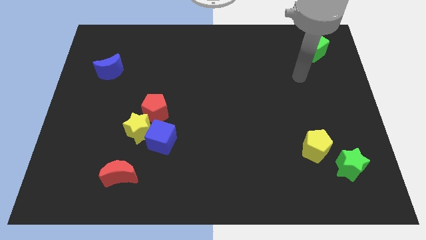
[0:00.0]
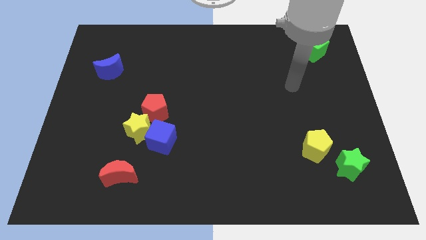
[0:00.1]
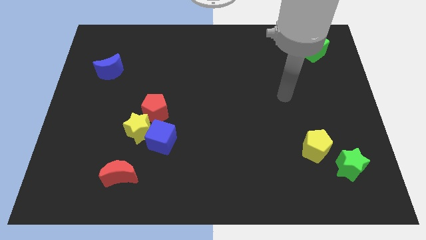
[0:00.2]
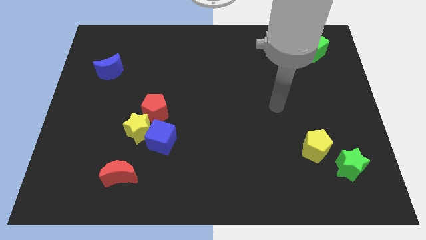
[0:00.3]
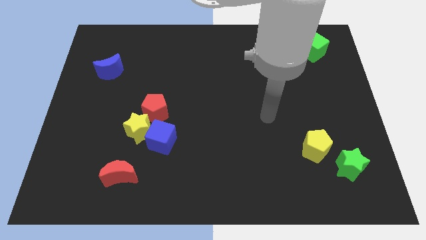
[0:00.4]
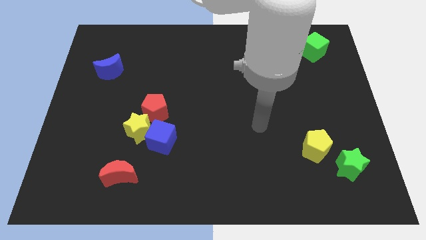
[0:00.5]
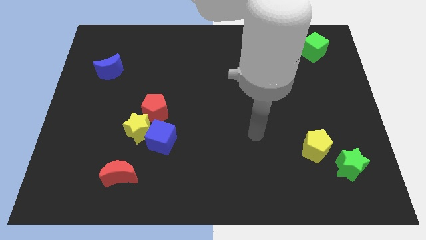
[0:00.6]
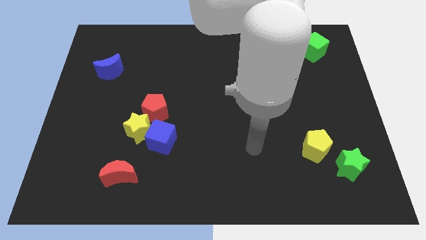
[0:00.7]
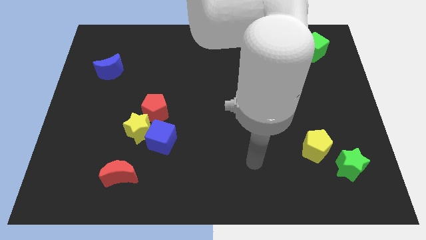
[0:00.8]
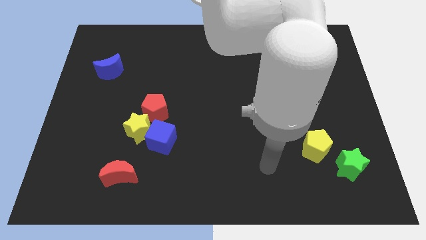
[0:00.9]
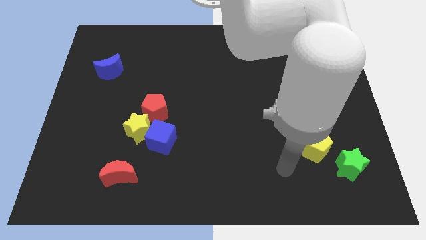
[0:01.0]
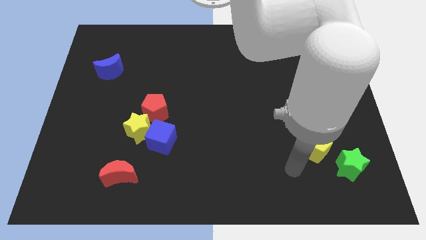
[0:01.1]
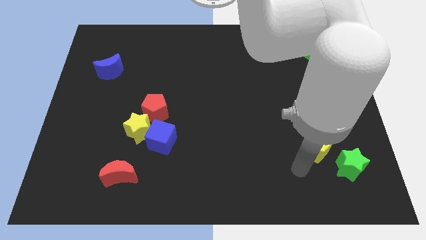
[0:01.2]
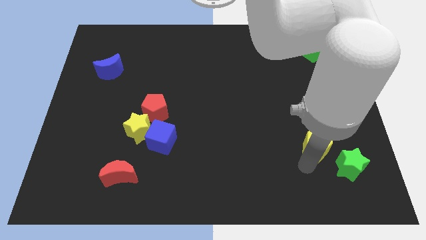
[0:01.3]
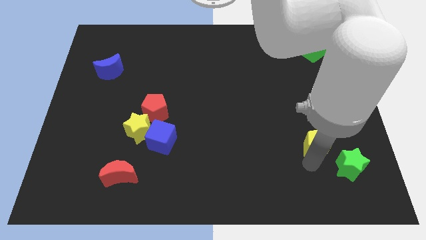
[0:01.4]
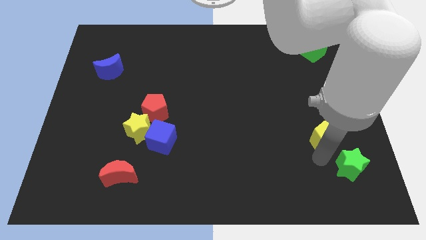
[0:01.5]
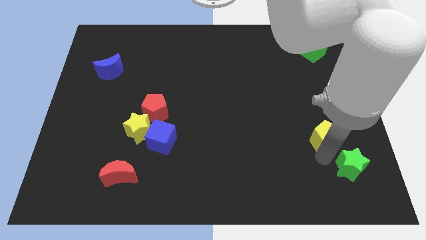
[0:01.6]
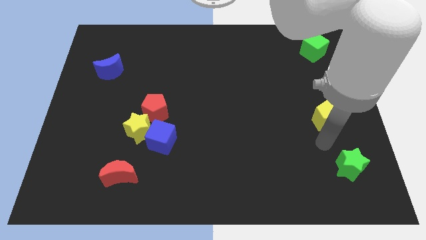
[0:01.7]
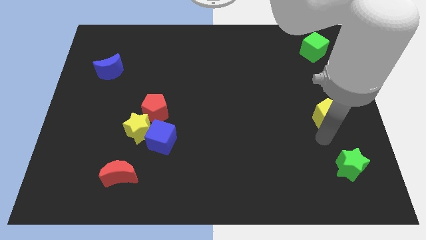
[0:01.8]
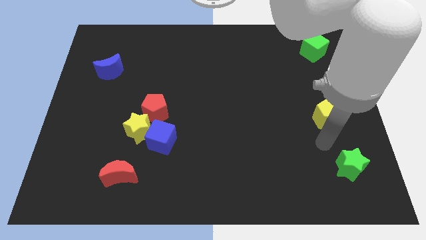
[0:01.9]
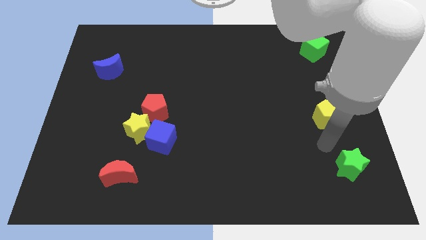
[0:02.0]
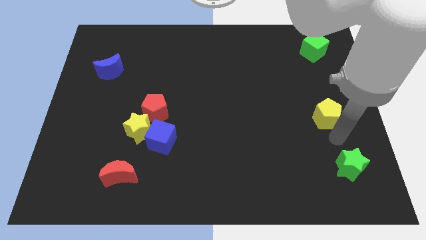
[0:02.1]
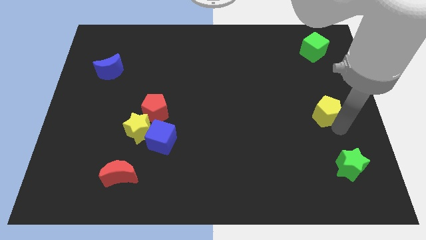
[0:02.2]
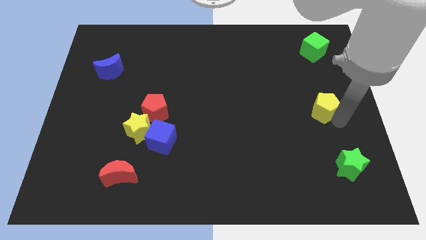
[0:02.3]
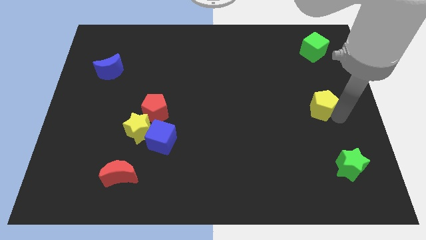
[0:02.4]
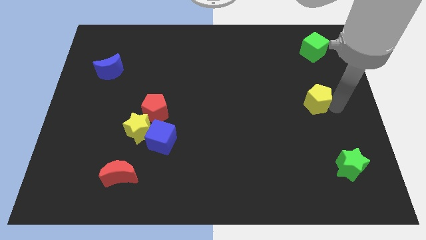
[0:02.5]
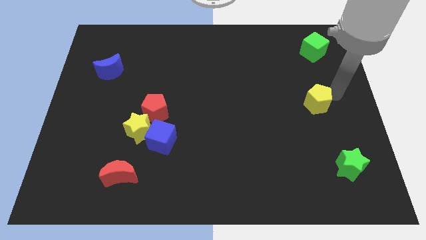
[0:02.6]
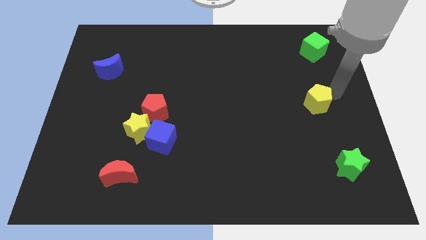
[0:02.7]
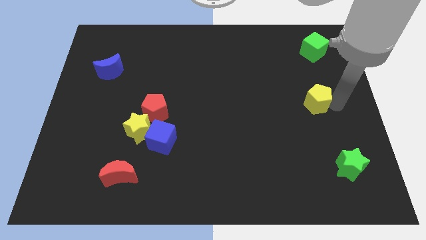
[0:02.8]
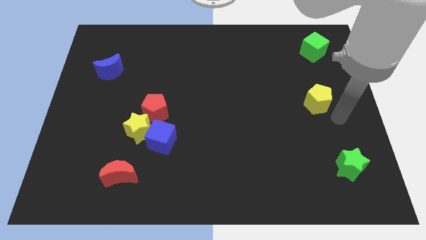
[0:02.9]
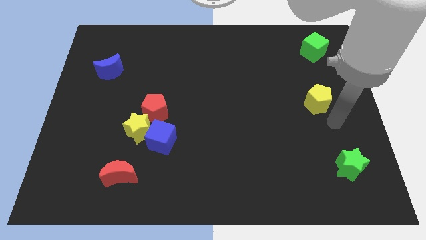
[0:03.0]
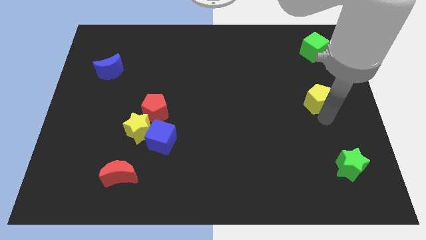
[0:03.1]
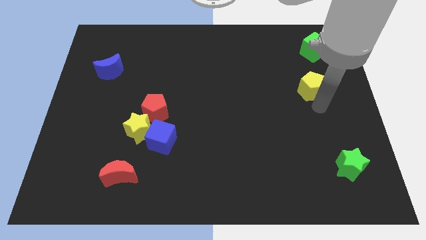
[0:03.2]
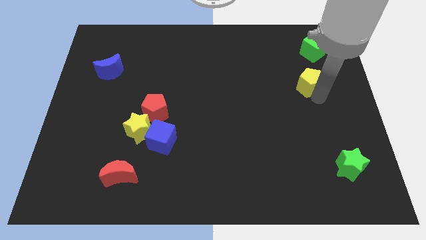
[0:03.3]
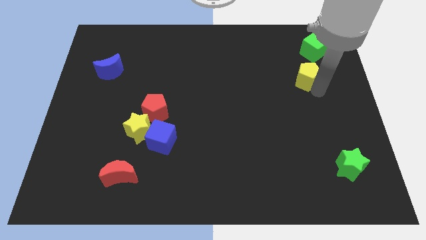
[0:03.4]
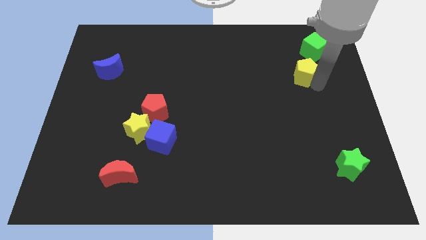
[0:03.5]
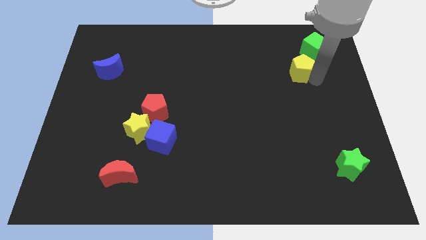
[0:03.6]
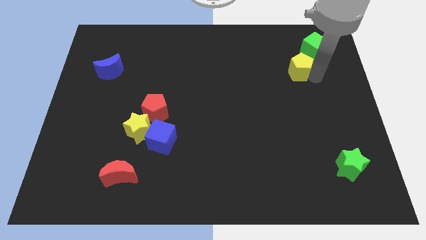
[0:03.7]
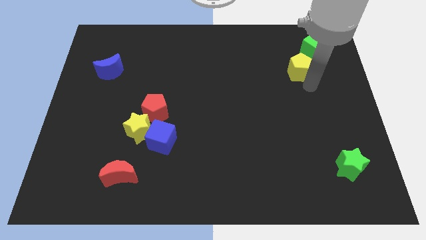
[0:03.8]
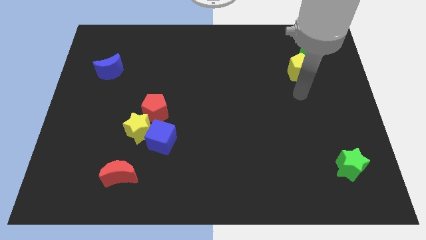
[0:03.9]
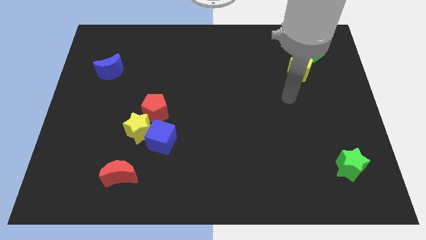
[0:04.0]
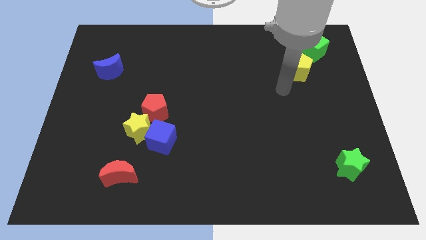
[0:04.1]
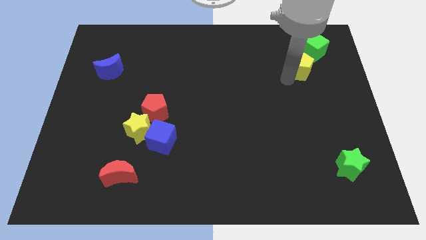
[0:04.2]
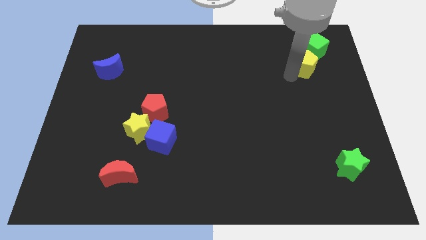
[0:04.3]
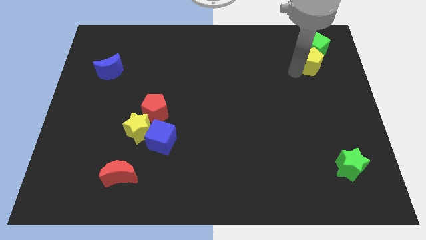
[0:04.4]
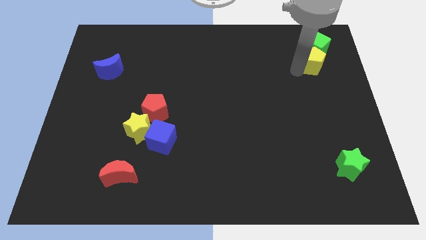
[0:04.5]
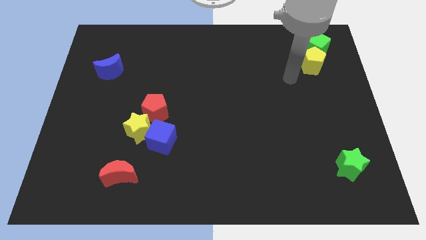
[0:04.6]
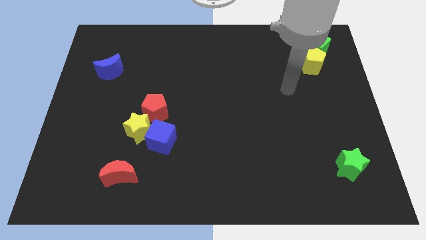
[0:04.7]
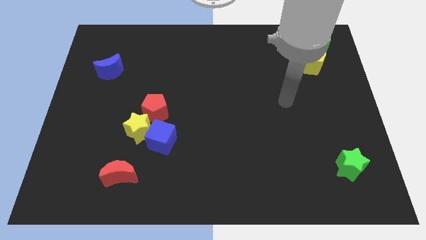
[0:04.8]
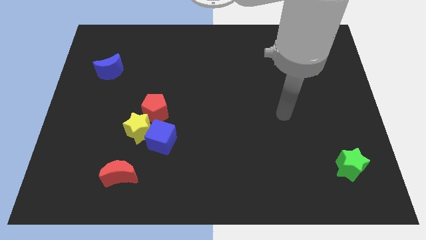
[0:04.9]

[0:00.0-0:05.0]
push the yellow pentagon into the green cube

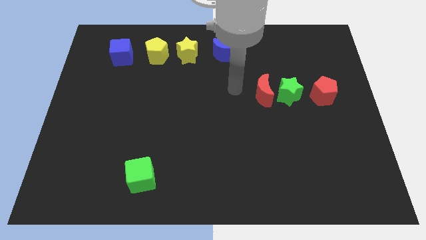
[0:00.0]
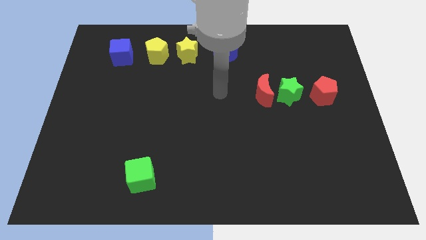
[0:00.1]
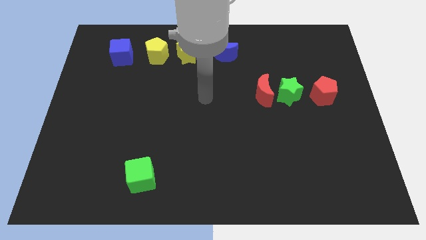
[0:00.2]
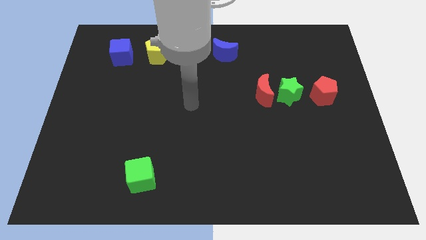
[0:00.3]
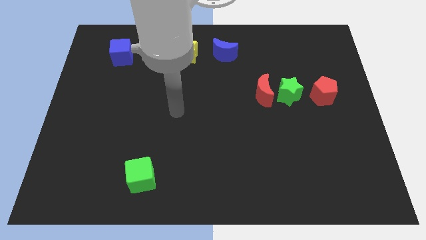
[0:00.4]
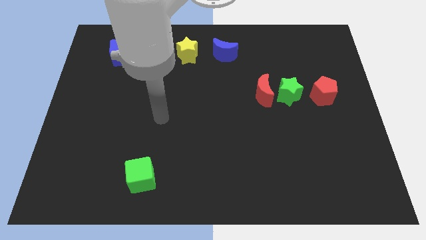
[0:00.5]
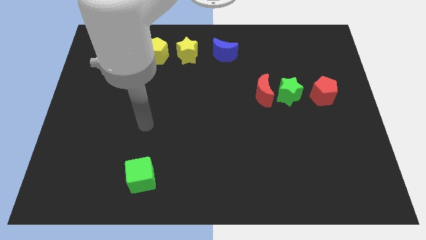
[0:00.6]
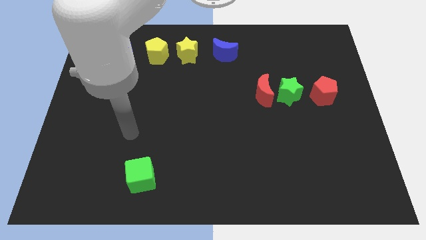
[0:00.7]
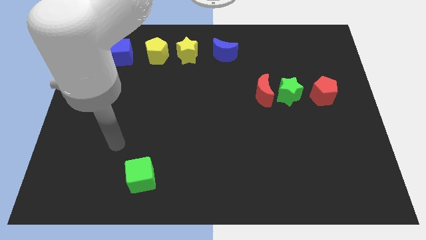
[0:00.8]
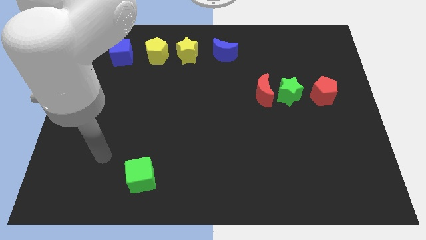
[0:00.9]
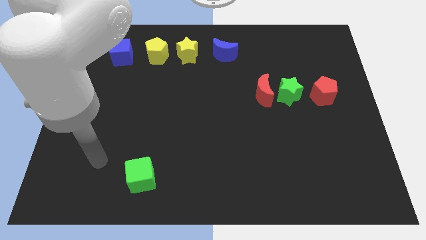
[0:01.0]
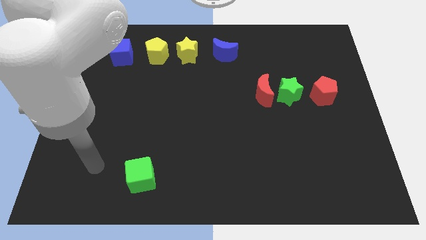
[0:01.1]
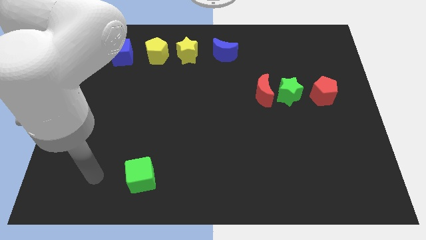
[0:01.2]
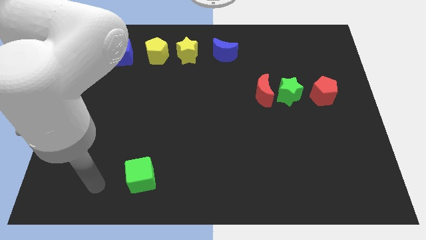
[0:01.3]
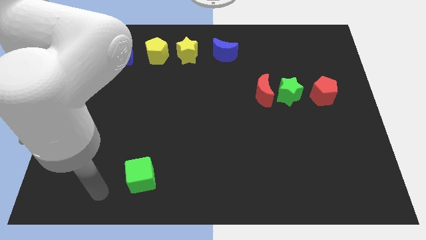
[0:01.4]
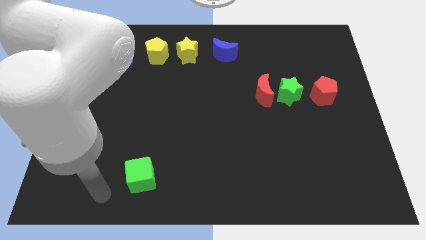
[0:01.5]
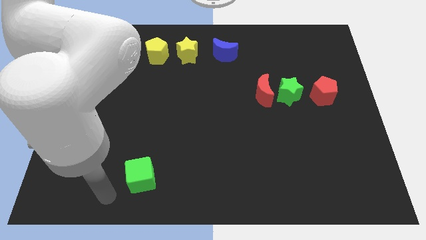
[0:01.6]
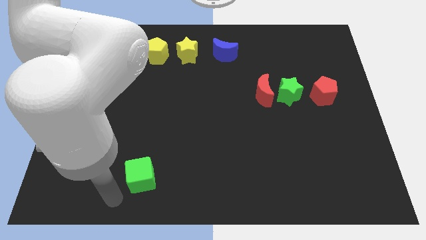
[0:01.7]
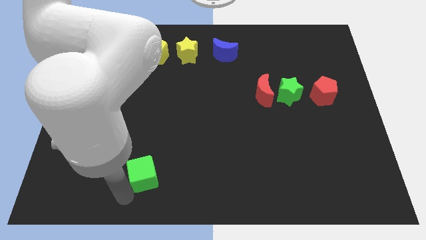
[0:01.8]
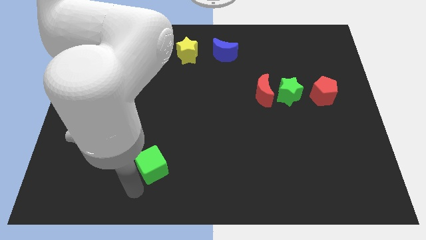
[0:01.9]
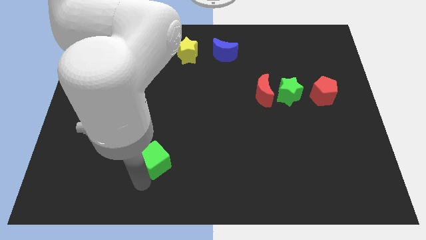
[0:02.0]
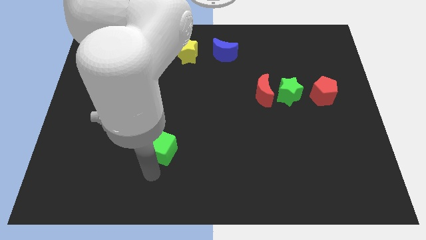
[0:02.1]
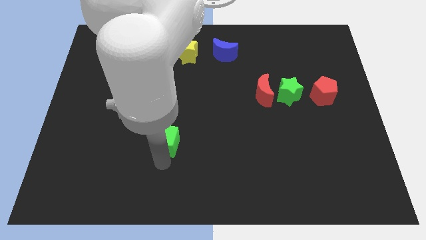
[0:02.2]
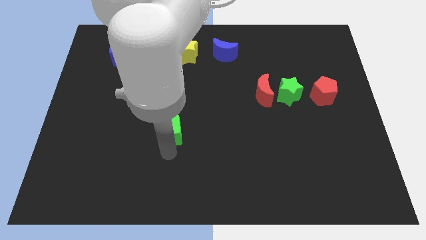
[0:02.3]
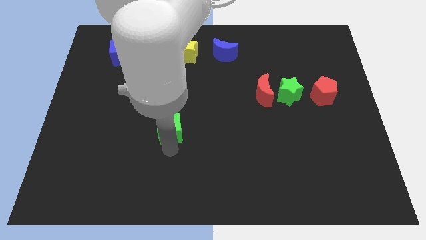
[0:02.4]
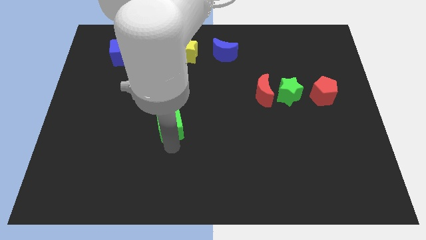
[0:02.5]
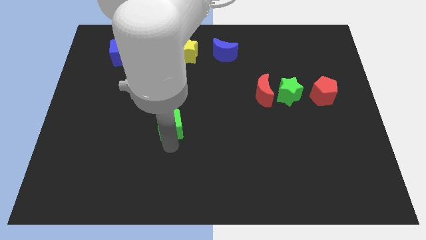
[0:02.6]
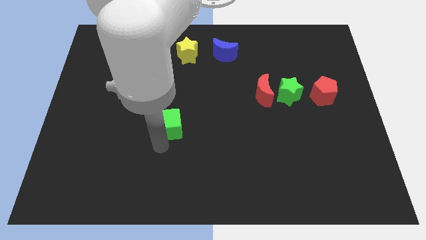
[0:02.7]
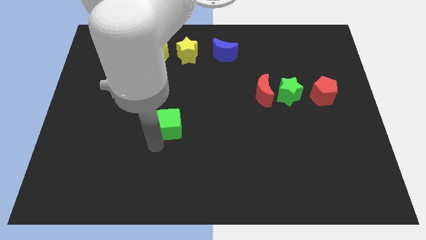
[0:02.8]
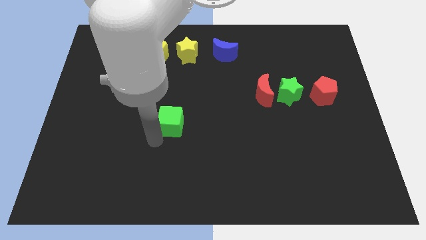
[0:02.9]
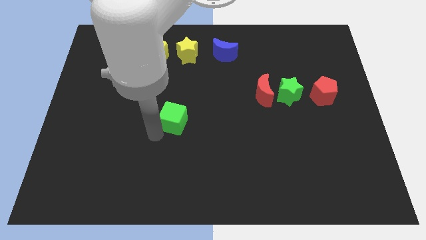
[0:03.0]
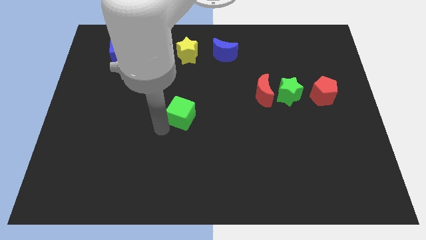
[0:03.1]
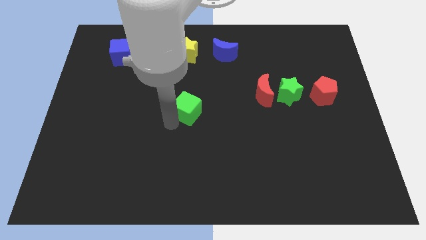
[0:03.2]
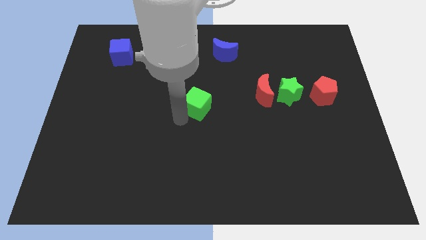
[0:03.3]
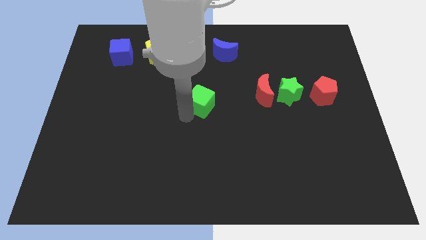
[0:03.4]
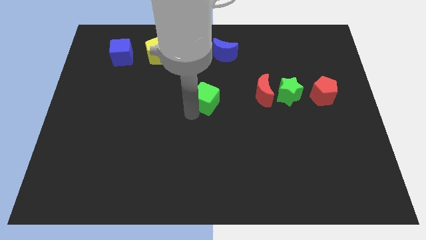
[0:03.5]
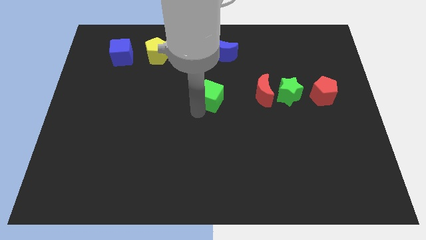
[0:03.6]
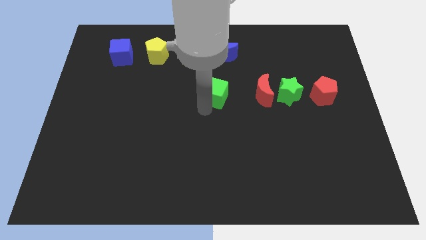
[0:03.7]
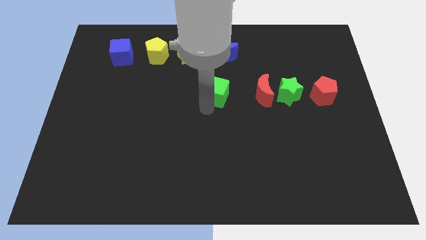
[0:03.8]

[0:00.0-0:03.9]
put the green cube at the center of the board
